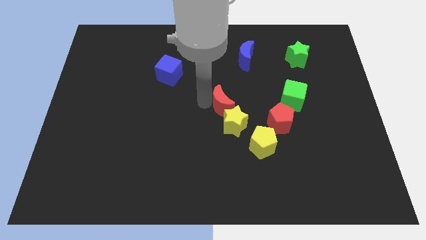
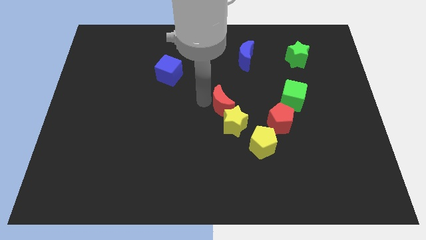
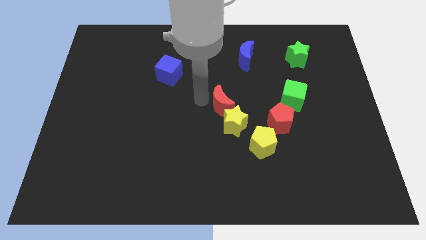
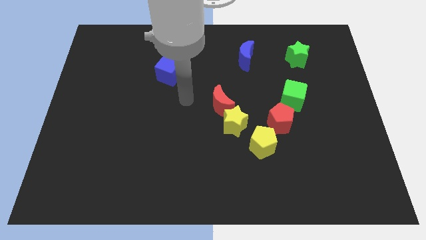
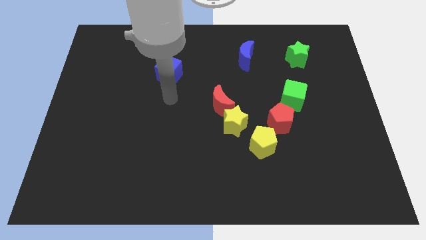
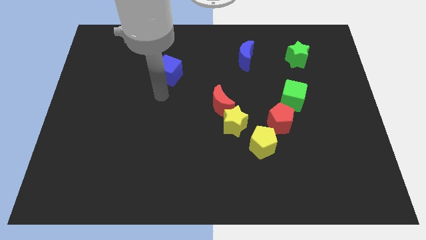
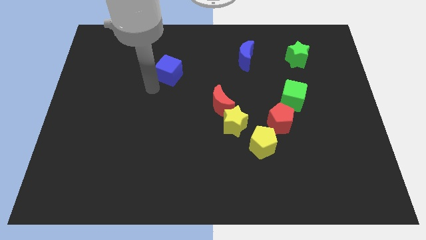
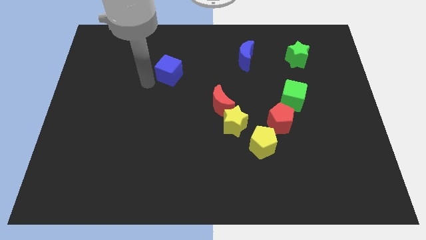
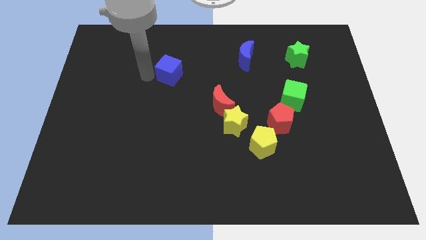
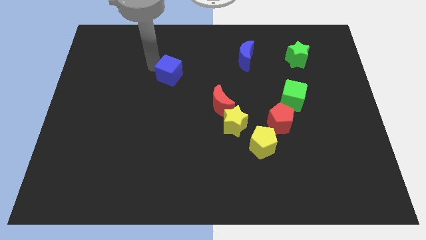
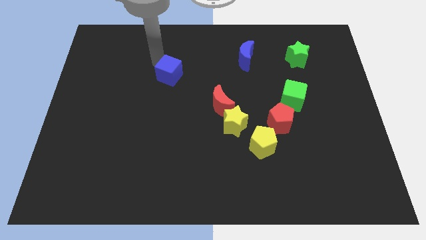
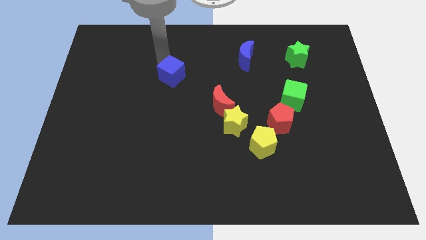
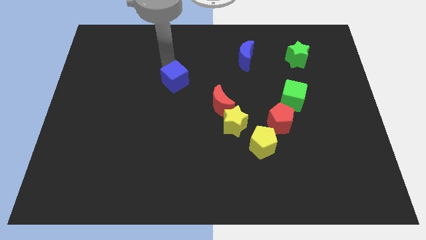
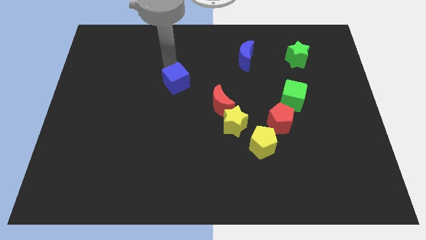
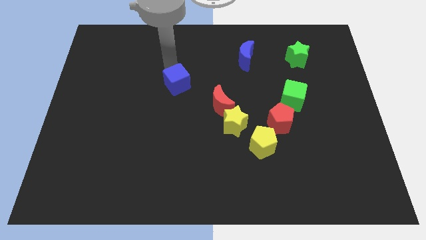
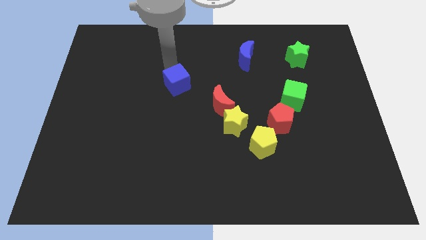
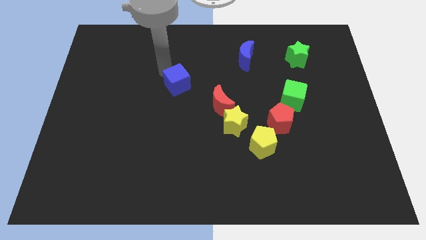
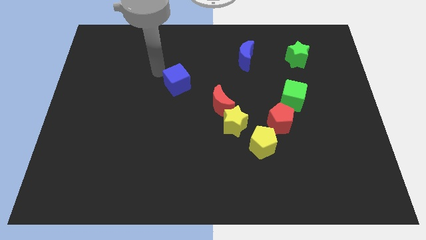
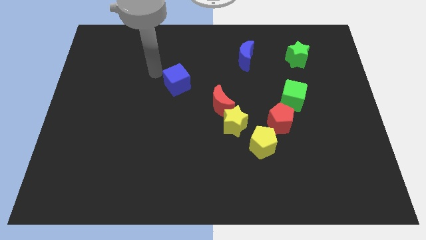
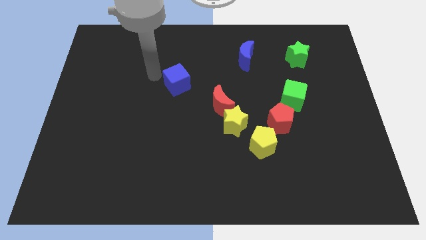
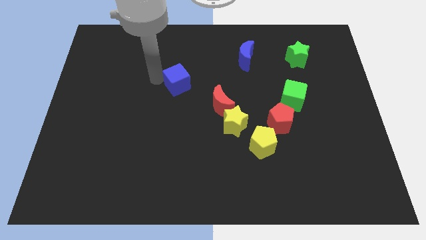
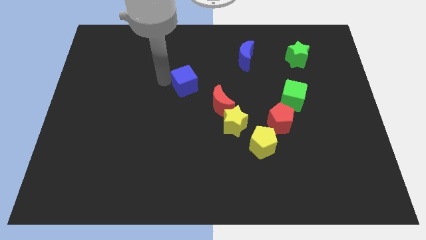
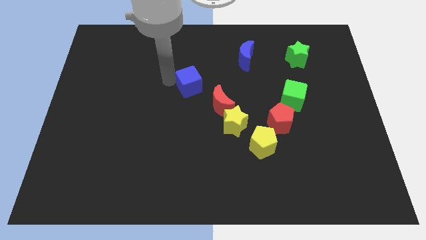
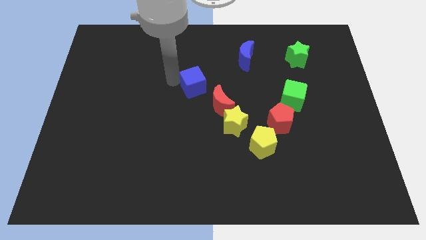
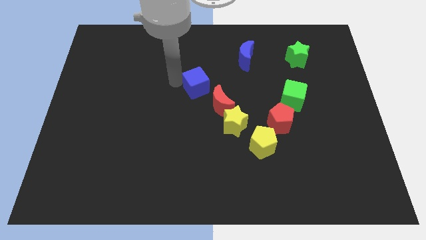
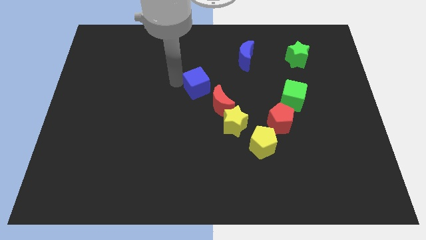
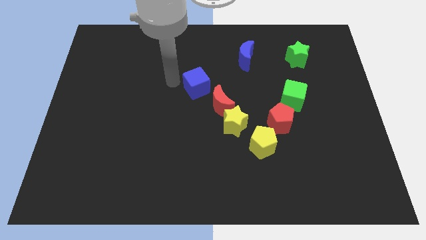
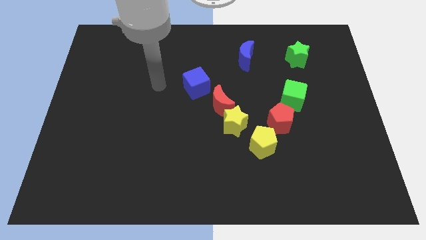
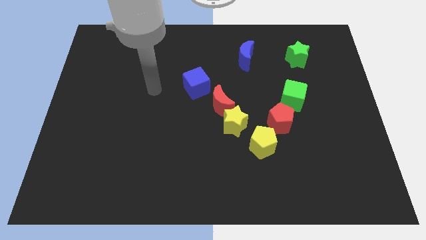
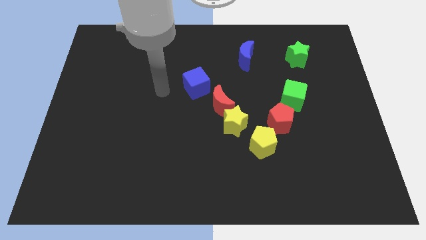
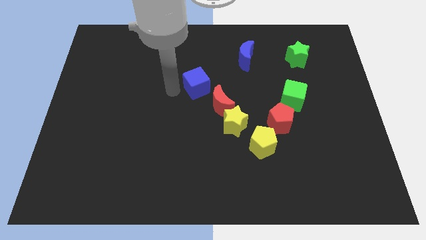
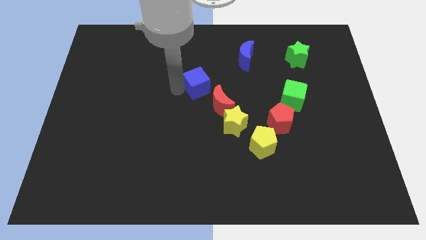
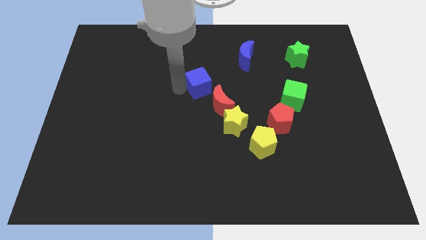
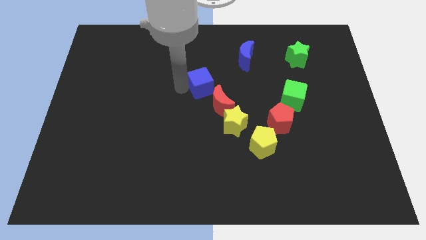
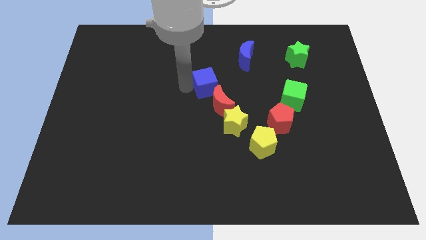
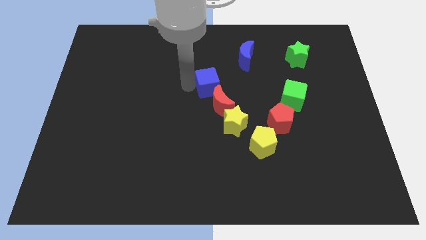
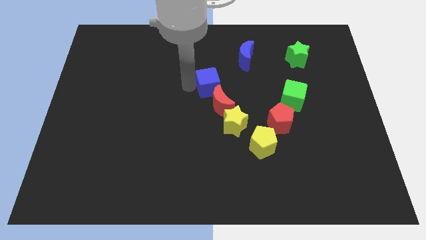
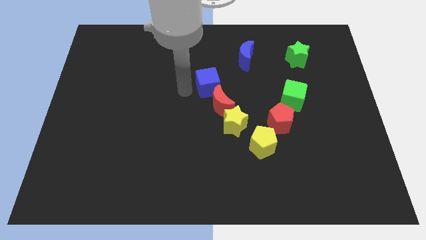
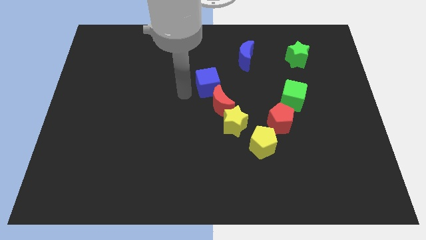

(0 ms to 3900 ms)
place the blue cube at the top of red moon to form a line with other blocks

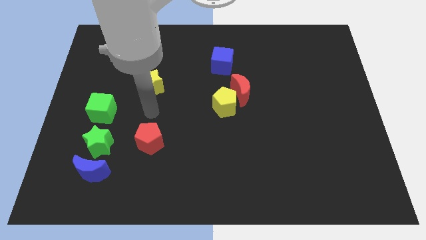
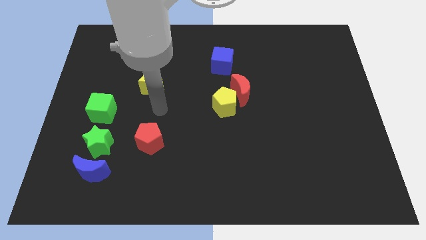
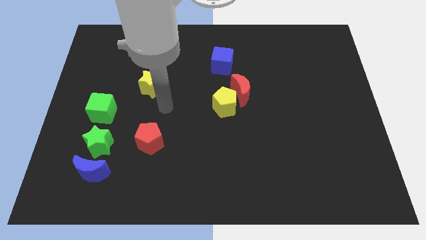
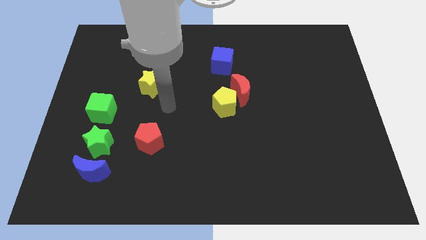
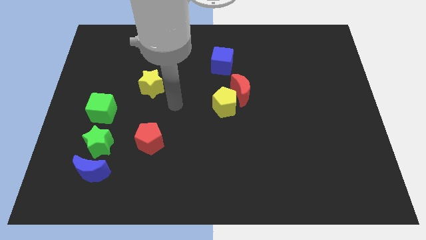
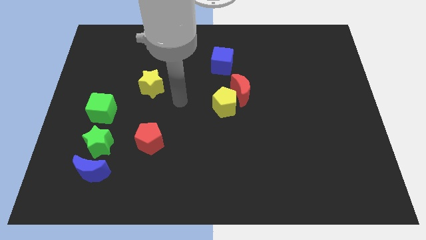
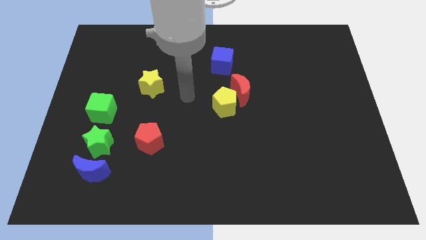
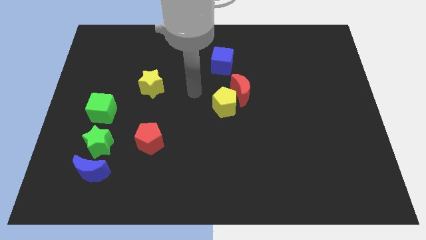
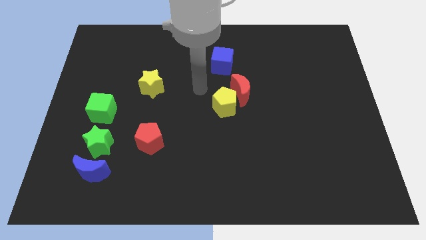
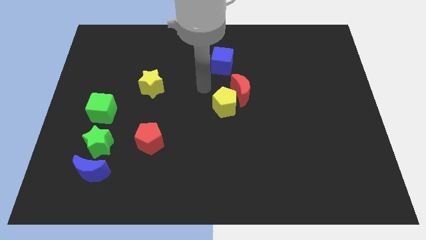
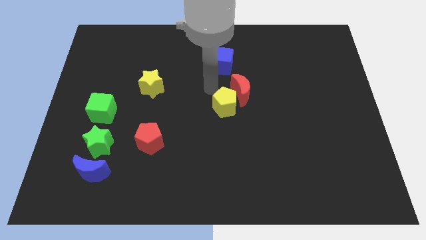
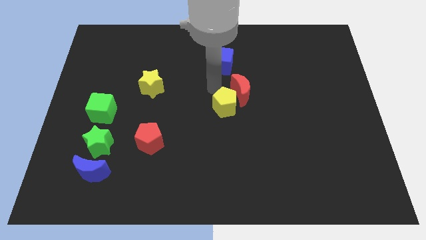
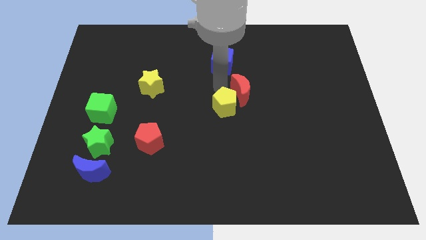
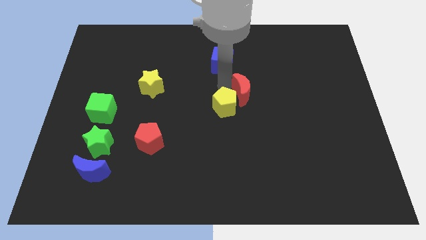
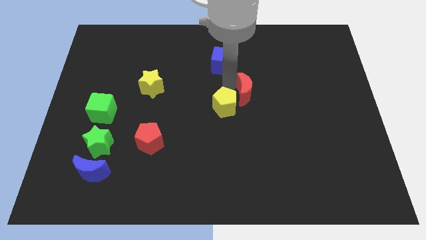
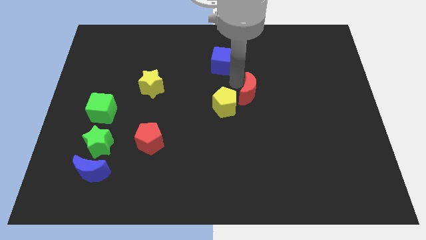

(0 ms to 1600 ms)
slightly touch red moon

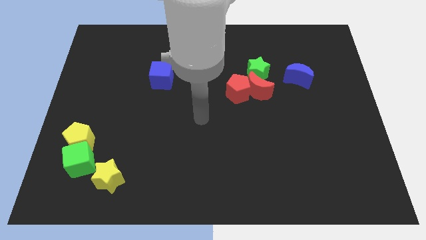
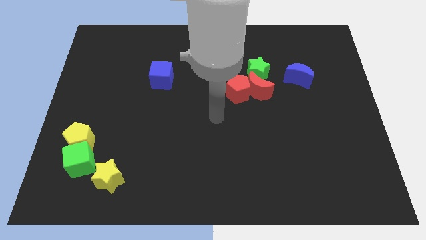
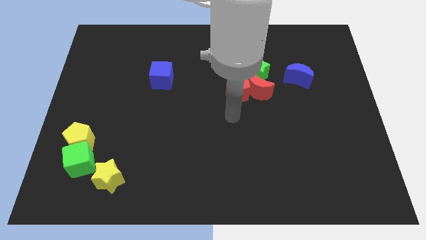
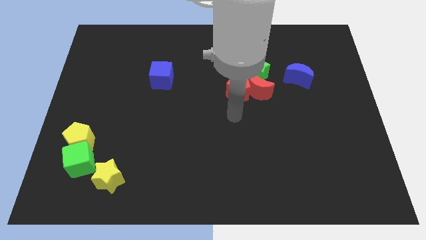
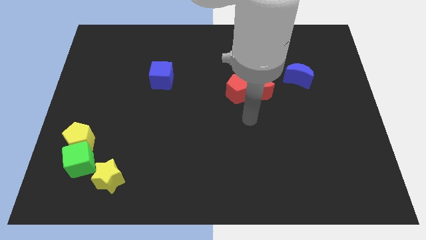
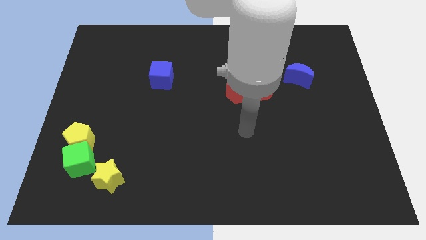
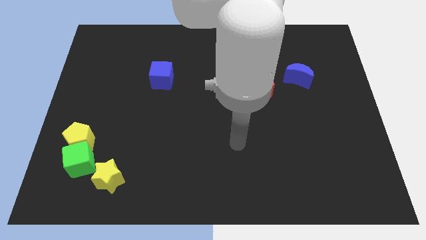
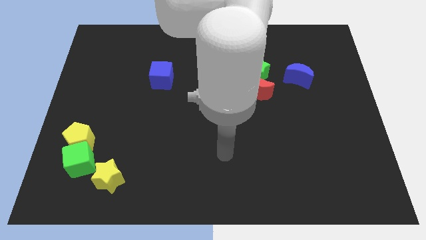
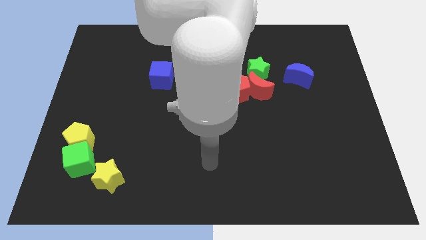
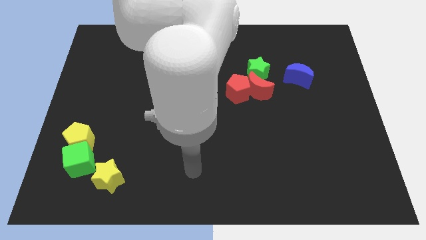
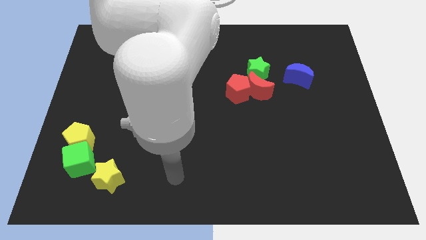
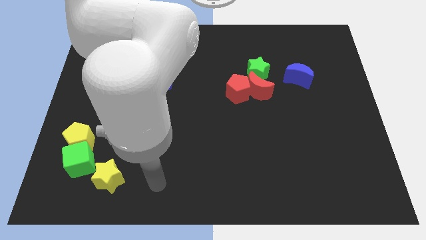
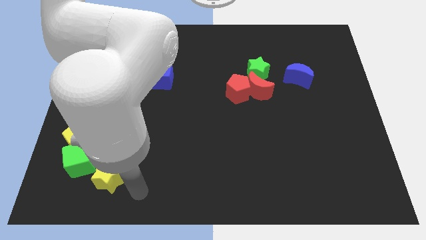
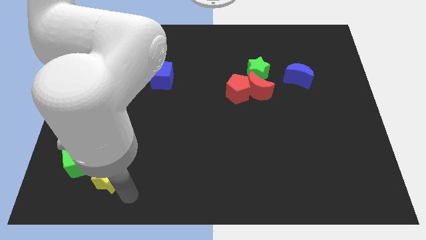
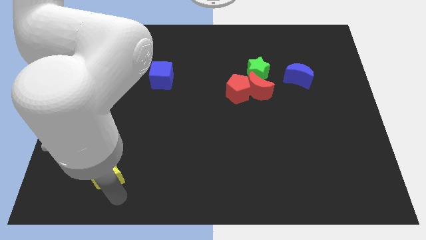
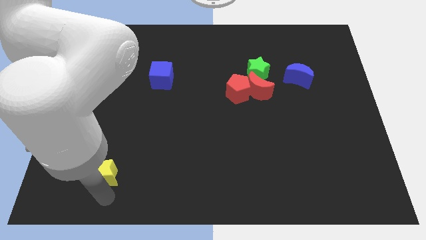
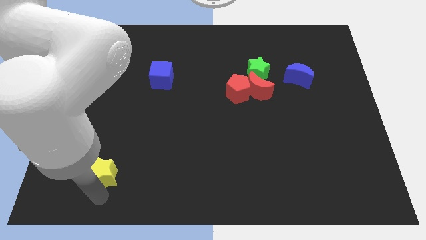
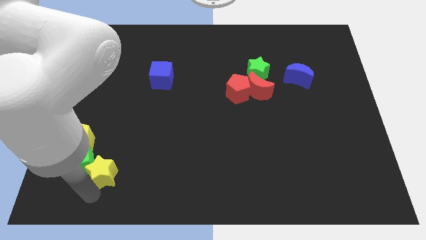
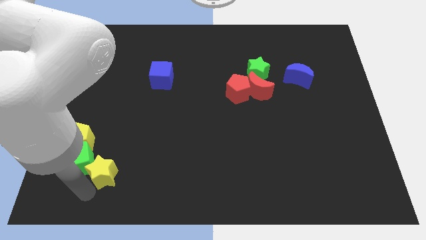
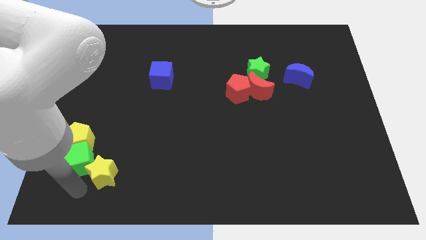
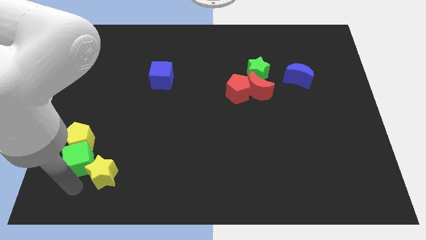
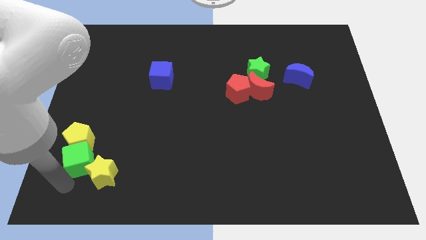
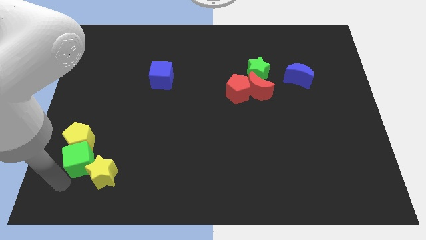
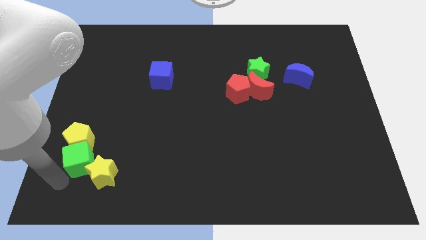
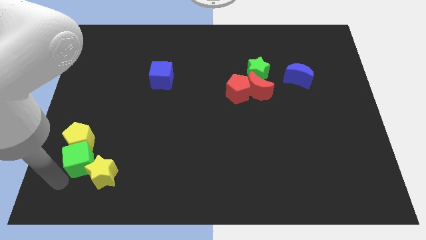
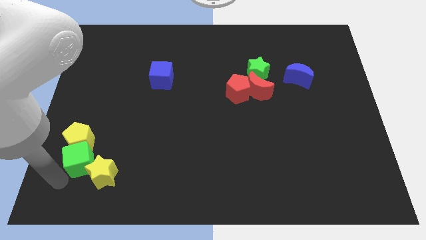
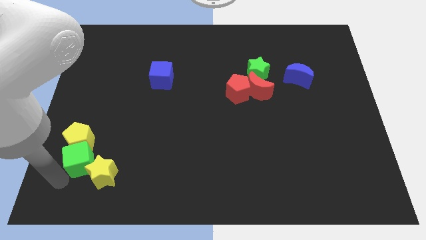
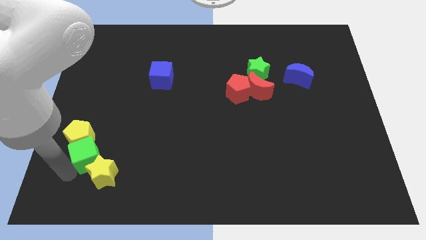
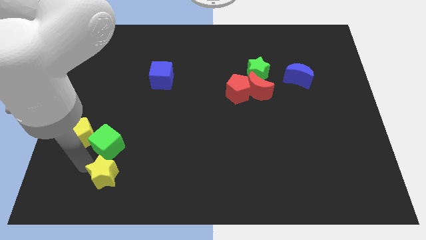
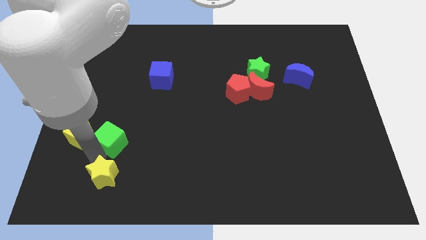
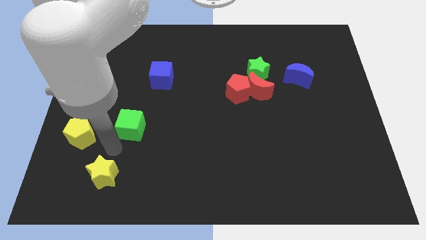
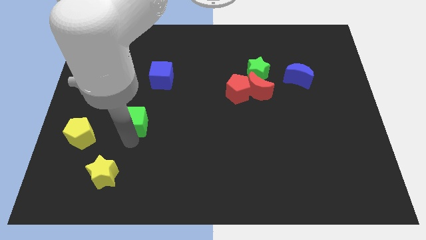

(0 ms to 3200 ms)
separate the green cube from the yellow blocks

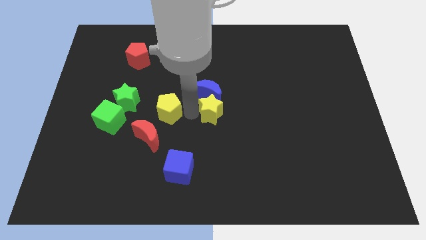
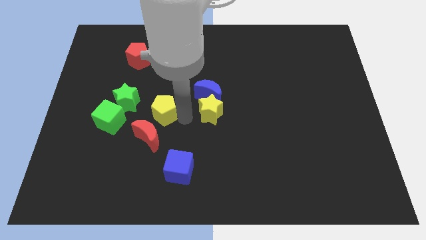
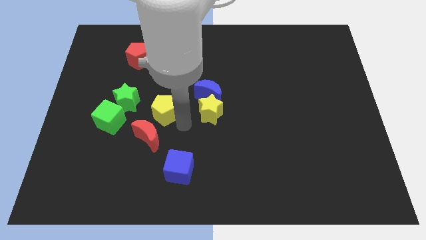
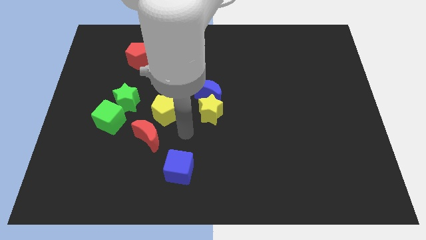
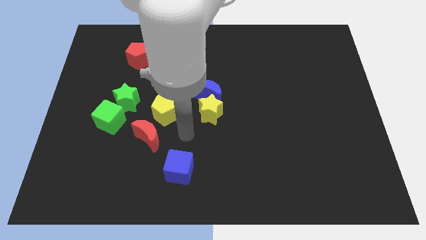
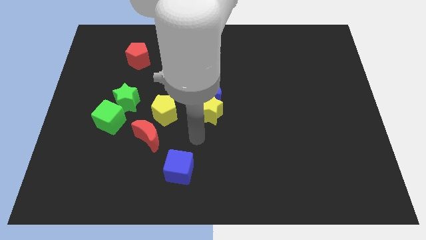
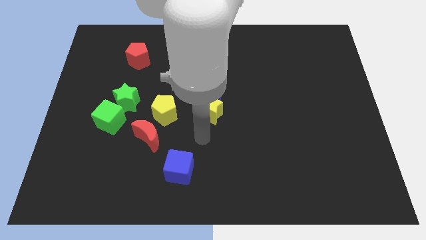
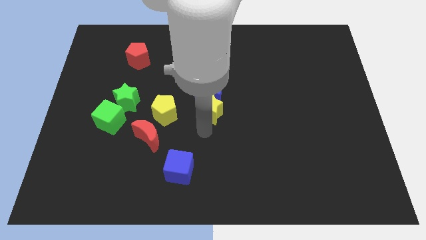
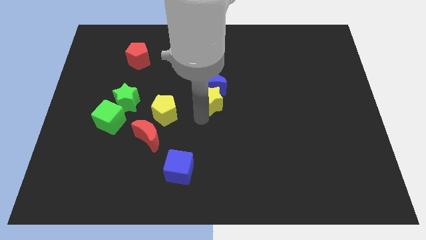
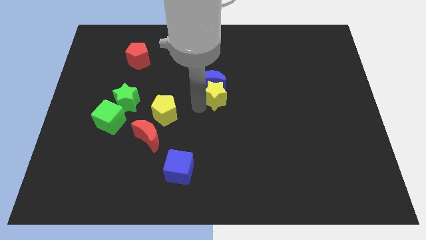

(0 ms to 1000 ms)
push yellow star in to blue moon
